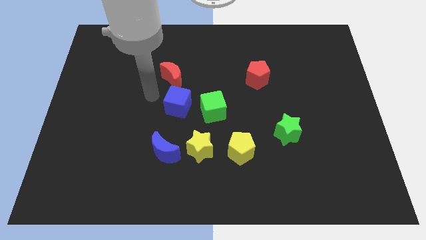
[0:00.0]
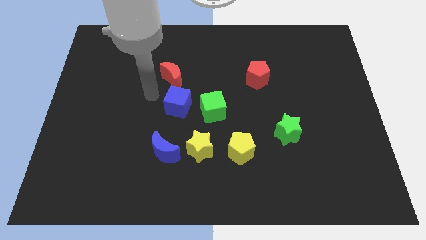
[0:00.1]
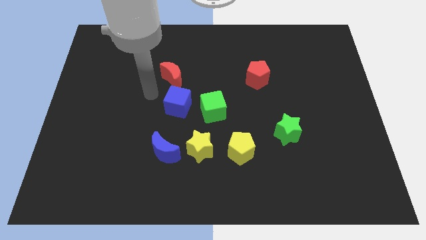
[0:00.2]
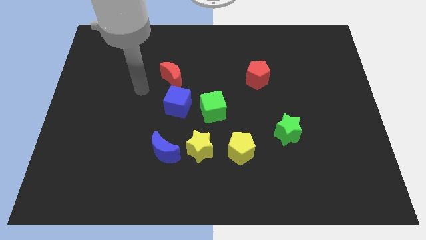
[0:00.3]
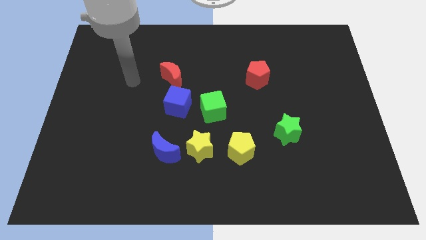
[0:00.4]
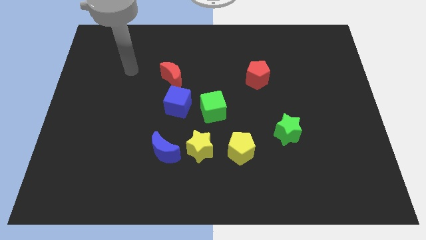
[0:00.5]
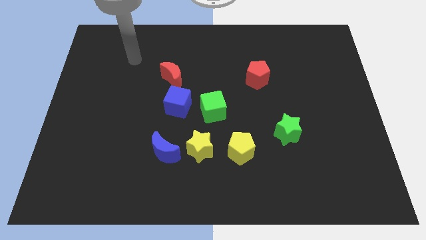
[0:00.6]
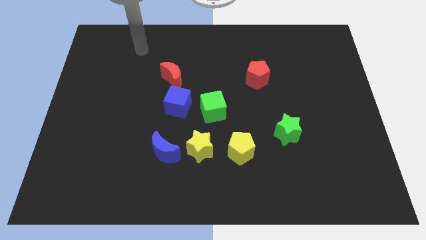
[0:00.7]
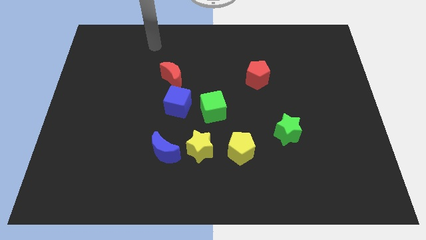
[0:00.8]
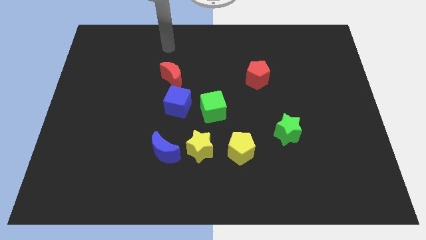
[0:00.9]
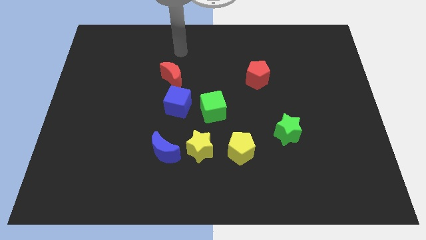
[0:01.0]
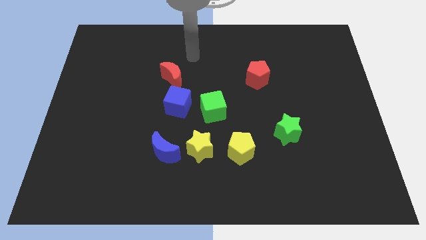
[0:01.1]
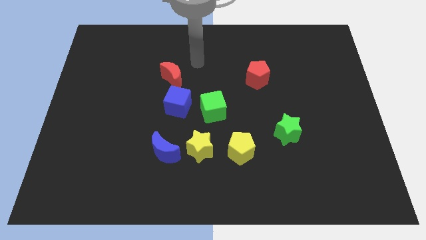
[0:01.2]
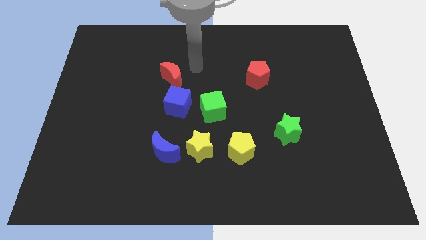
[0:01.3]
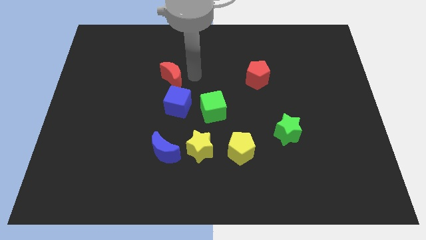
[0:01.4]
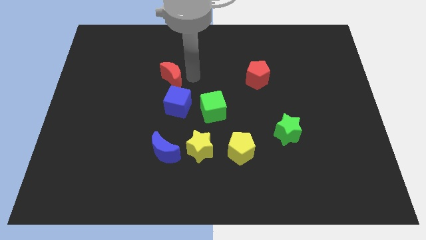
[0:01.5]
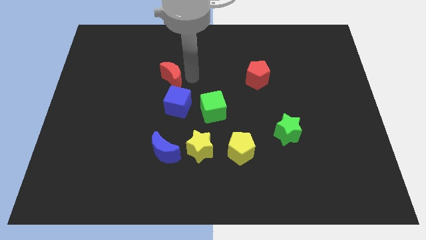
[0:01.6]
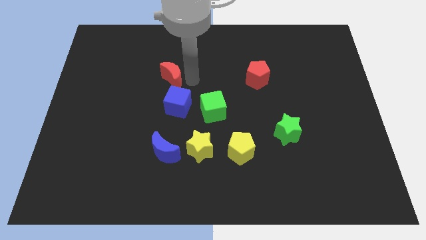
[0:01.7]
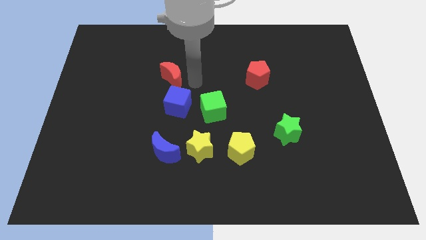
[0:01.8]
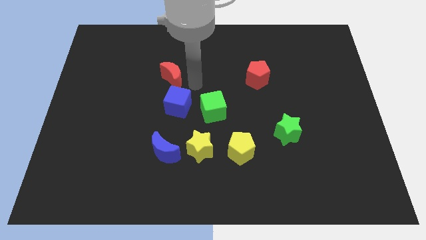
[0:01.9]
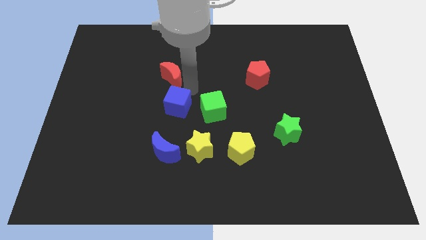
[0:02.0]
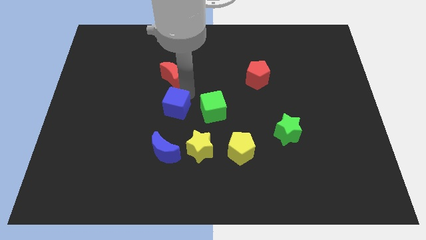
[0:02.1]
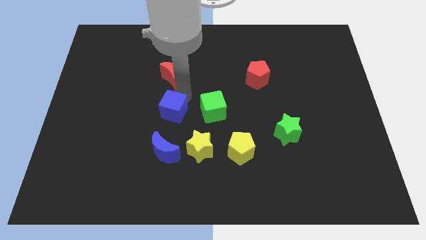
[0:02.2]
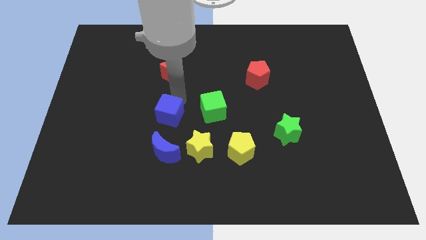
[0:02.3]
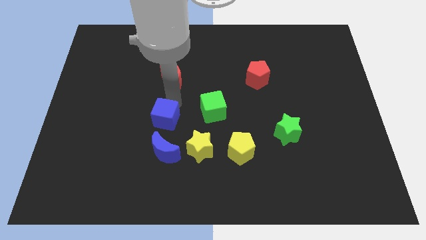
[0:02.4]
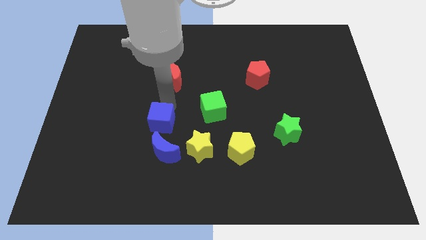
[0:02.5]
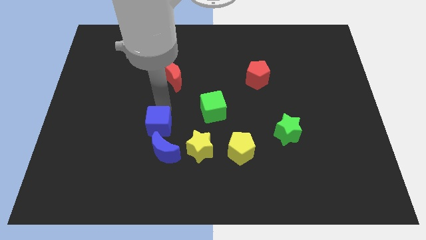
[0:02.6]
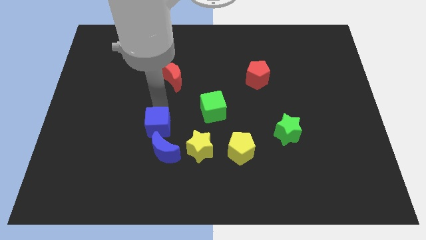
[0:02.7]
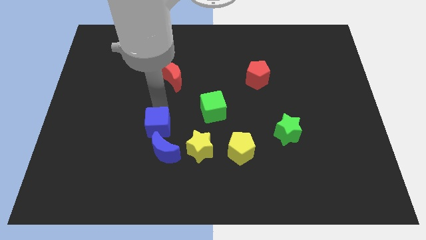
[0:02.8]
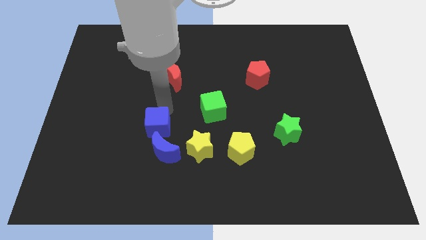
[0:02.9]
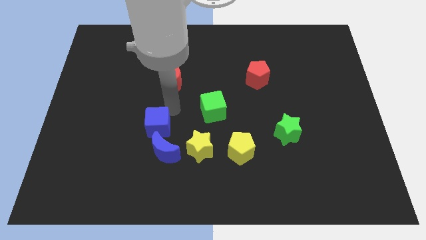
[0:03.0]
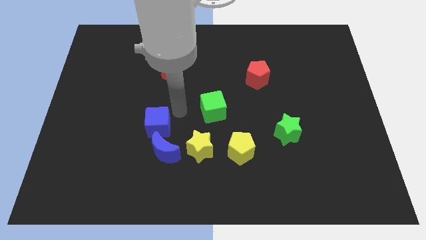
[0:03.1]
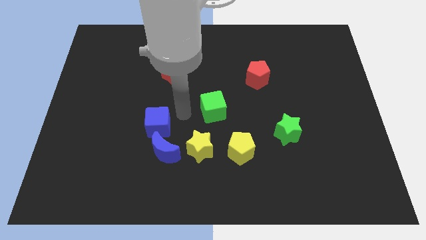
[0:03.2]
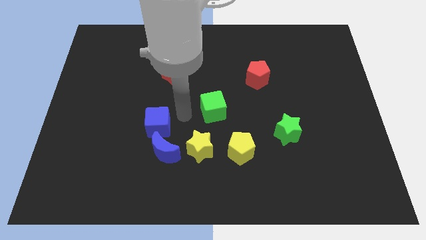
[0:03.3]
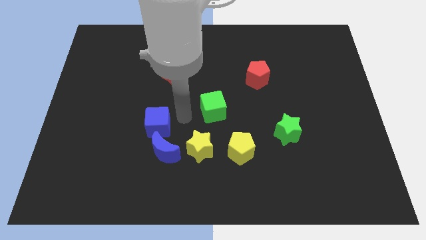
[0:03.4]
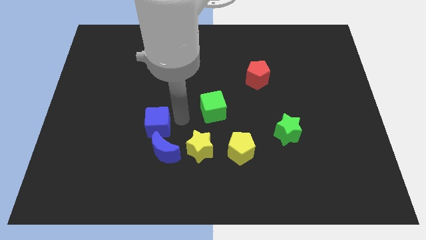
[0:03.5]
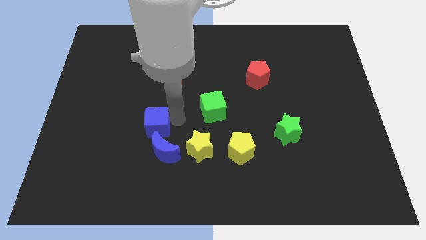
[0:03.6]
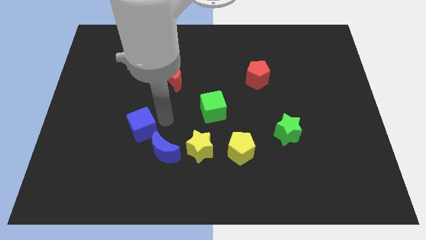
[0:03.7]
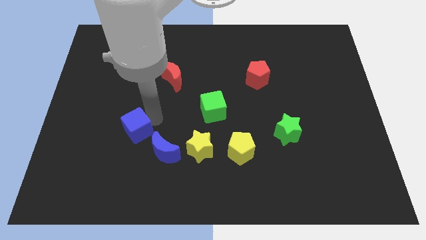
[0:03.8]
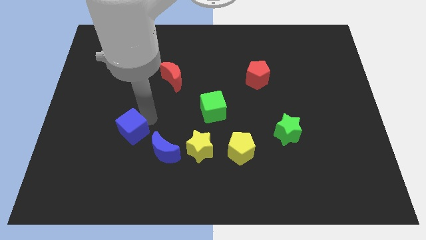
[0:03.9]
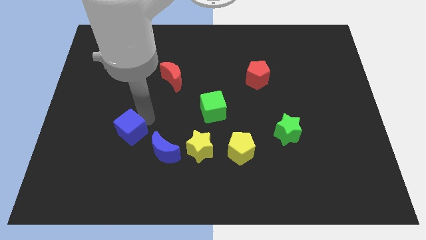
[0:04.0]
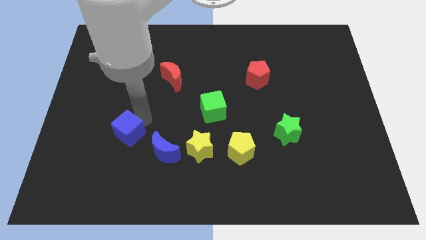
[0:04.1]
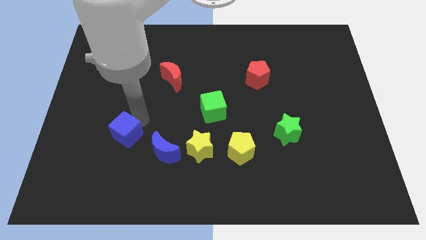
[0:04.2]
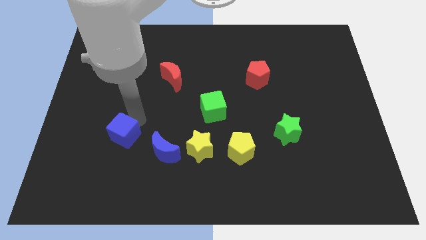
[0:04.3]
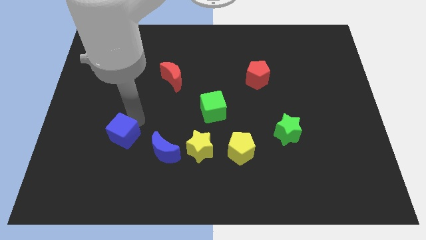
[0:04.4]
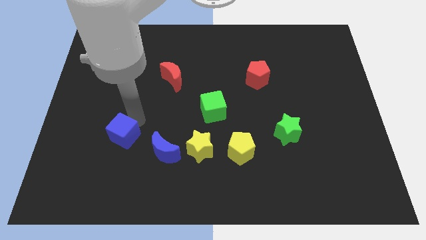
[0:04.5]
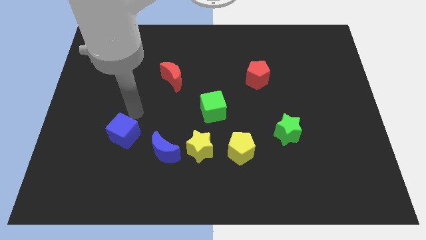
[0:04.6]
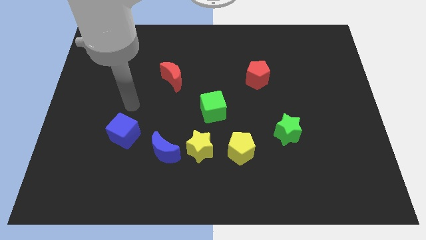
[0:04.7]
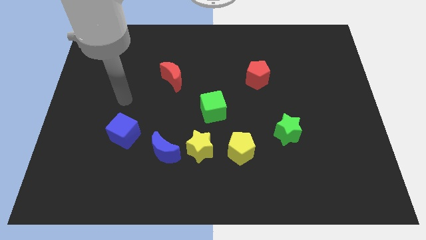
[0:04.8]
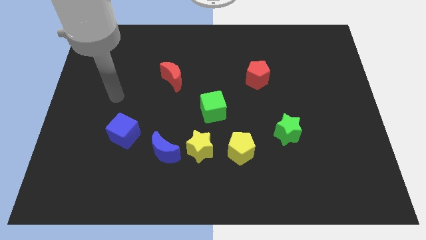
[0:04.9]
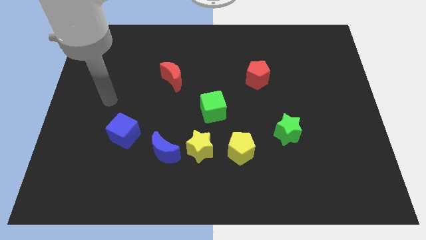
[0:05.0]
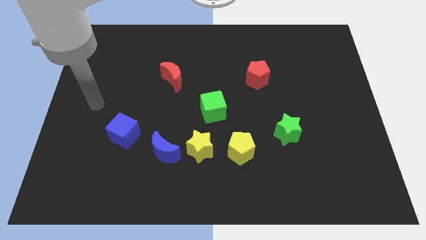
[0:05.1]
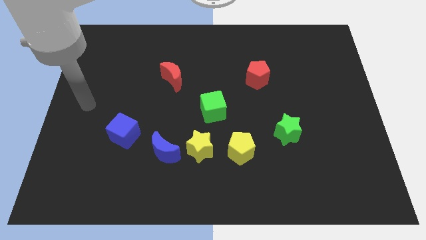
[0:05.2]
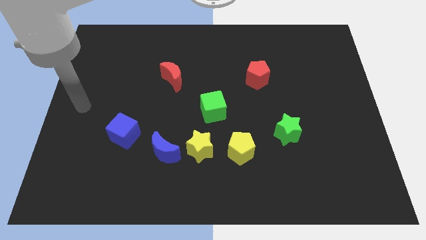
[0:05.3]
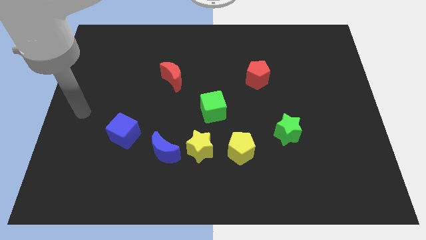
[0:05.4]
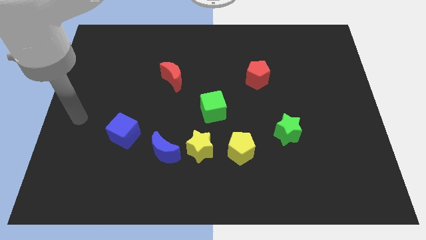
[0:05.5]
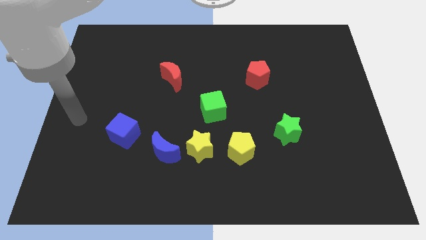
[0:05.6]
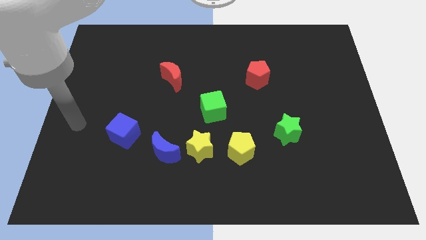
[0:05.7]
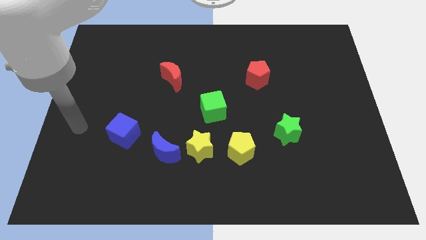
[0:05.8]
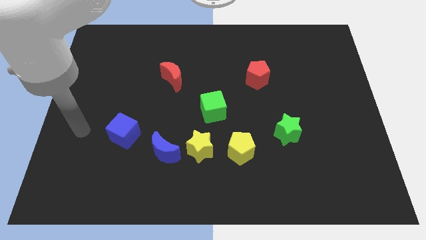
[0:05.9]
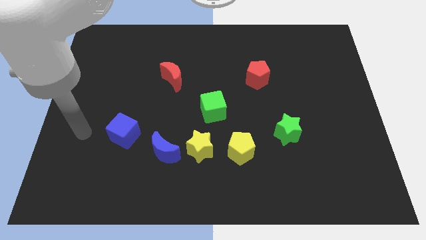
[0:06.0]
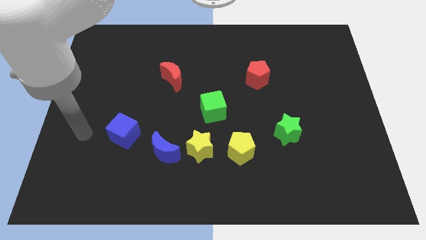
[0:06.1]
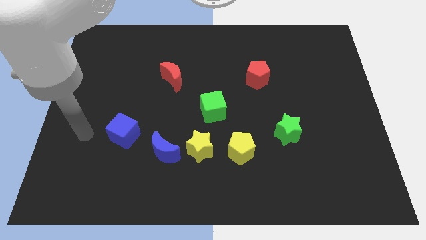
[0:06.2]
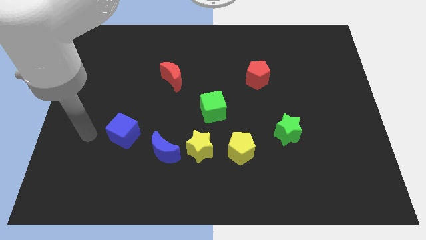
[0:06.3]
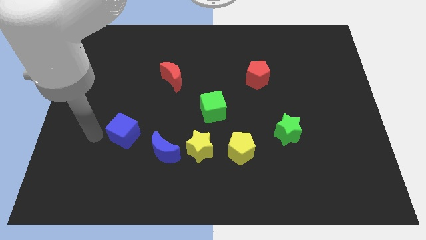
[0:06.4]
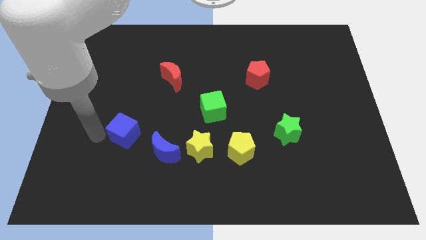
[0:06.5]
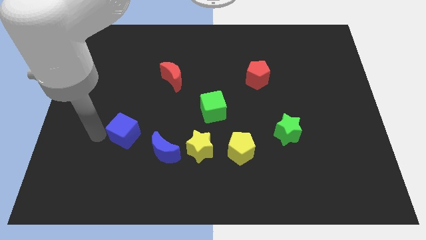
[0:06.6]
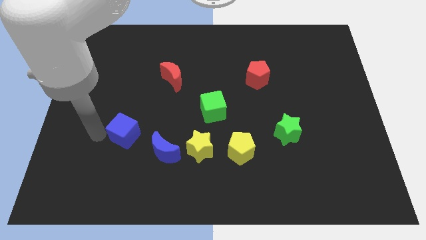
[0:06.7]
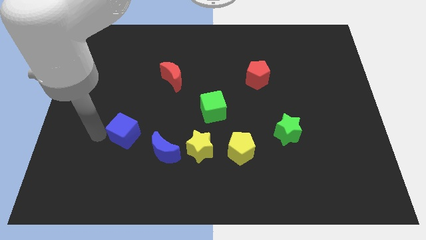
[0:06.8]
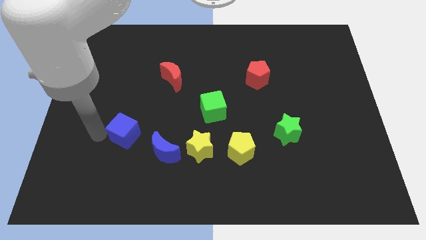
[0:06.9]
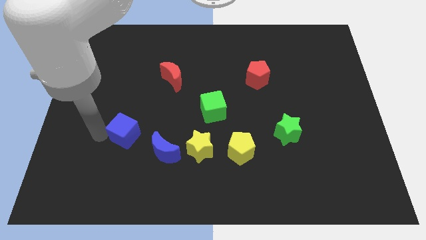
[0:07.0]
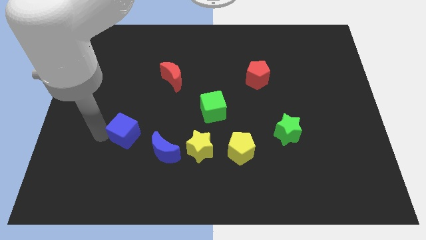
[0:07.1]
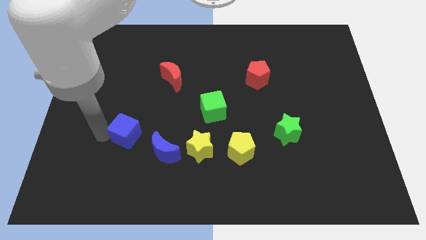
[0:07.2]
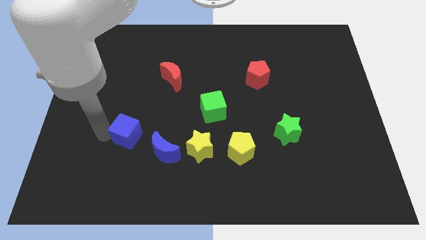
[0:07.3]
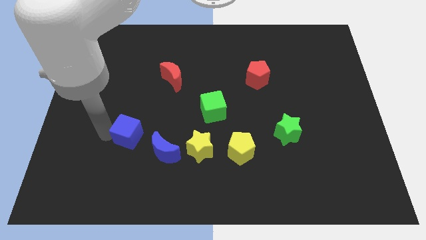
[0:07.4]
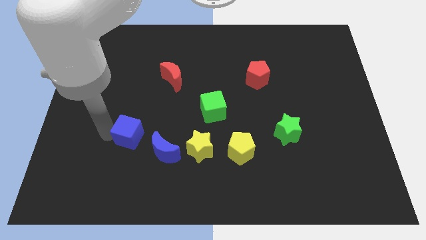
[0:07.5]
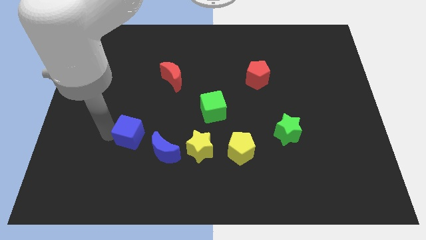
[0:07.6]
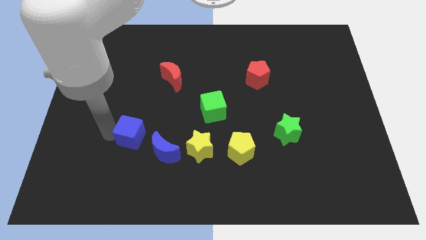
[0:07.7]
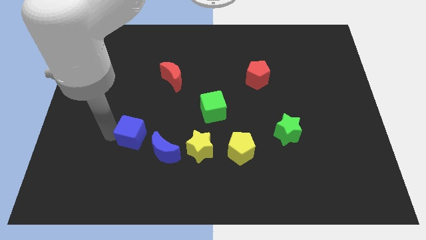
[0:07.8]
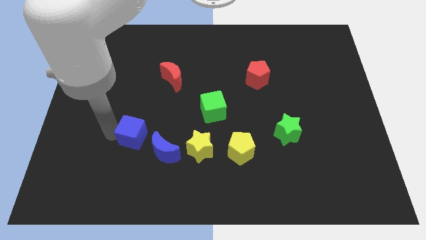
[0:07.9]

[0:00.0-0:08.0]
move the blue cube close to the blue moon

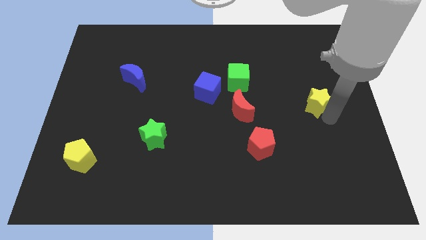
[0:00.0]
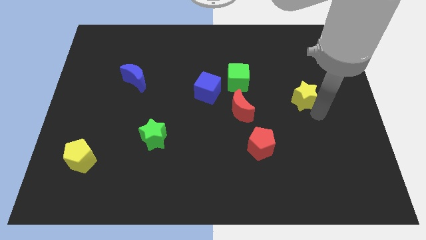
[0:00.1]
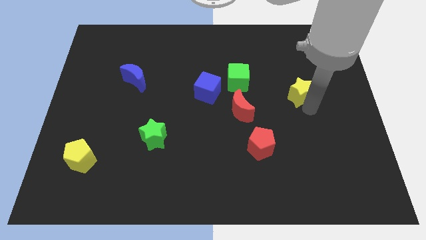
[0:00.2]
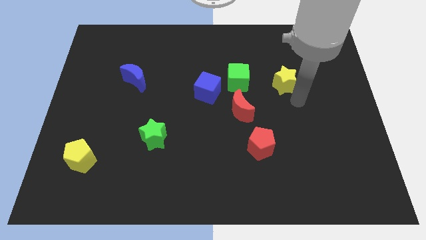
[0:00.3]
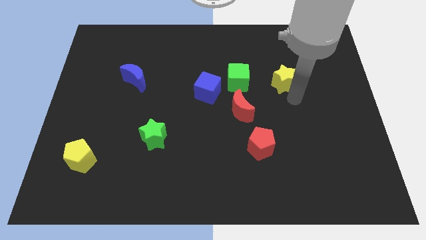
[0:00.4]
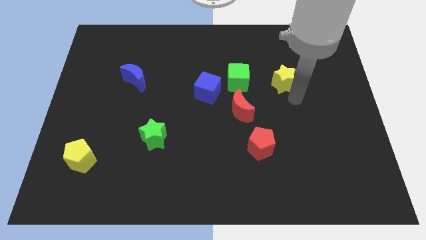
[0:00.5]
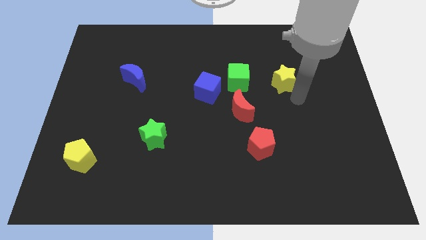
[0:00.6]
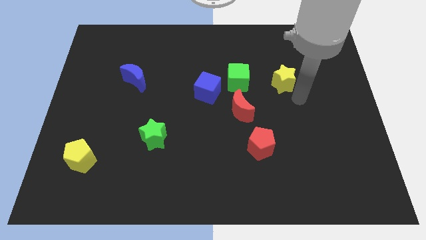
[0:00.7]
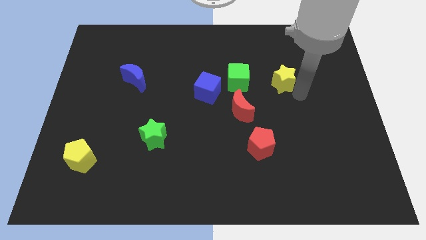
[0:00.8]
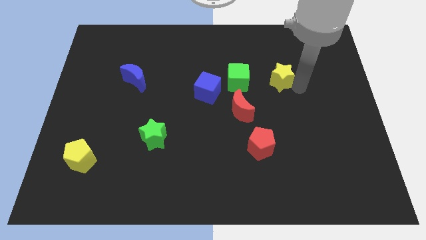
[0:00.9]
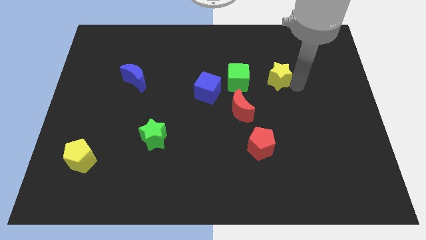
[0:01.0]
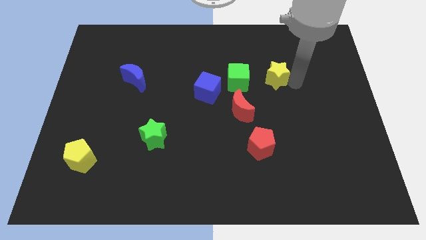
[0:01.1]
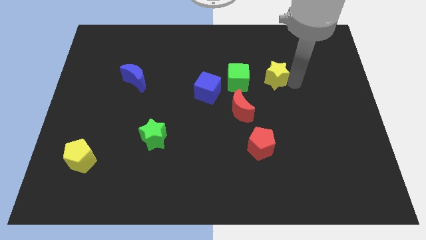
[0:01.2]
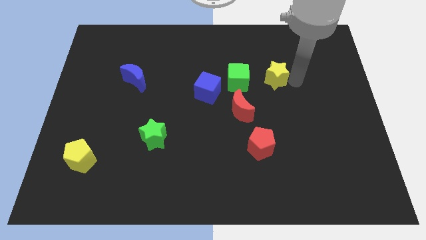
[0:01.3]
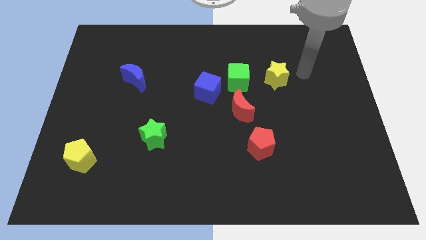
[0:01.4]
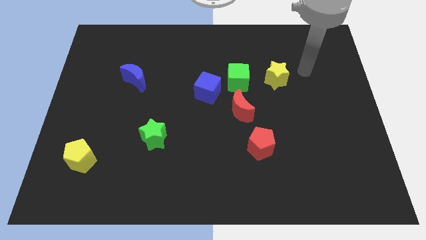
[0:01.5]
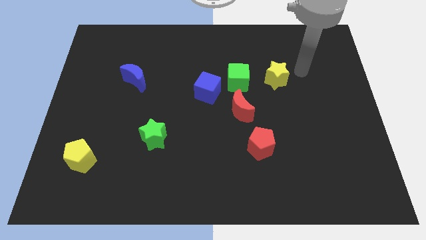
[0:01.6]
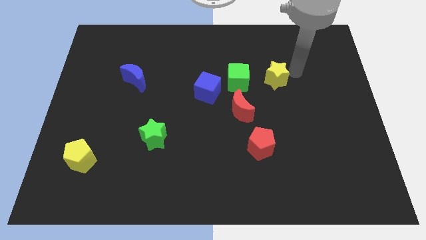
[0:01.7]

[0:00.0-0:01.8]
push the yellow star to the right of the green cube
